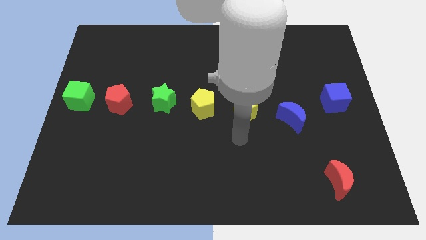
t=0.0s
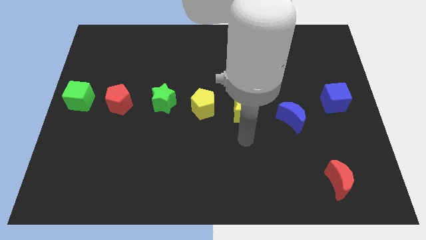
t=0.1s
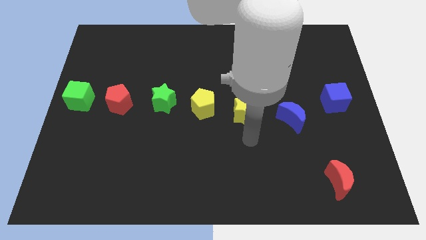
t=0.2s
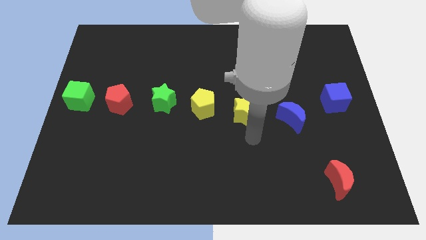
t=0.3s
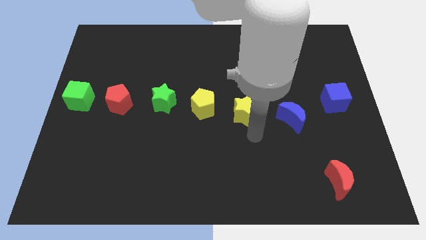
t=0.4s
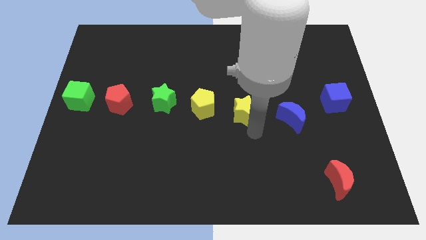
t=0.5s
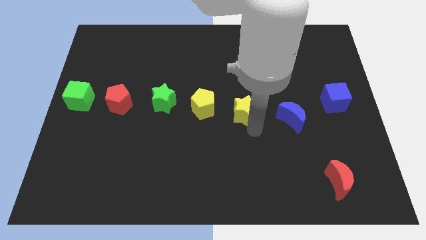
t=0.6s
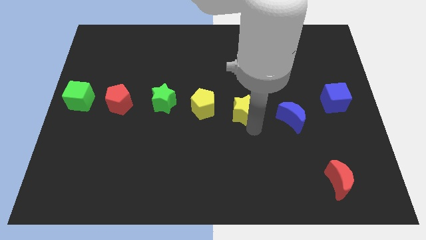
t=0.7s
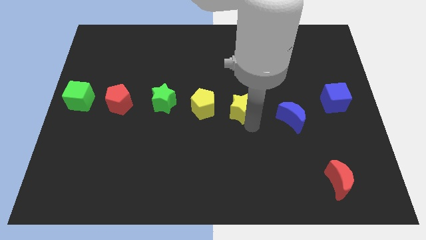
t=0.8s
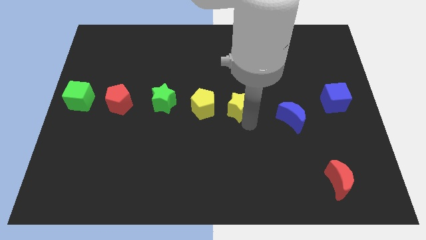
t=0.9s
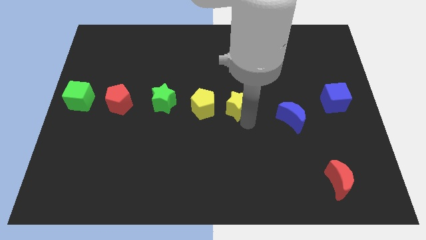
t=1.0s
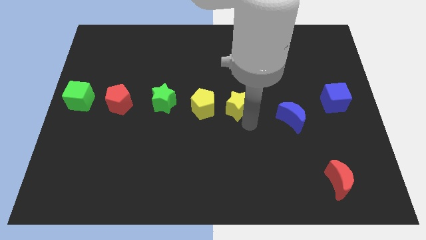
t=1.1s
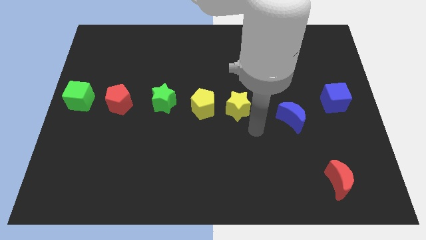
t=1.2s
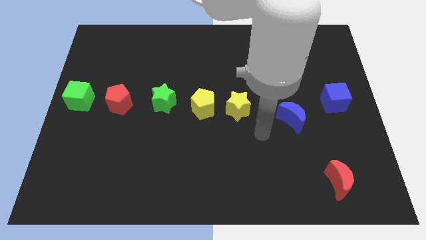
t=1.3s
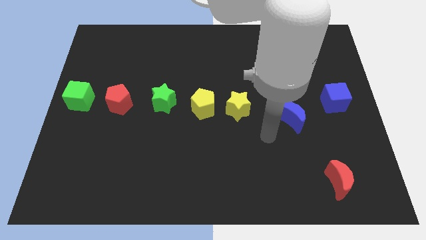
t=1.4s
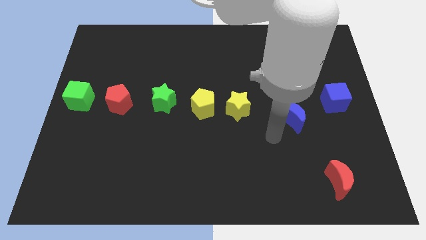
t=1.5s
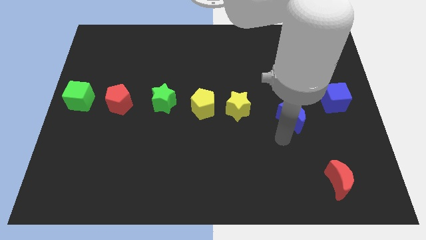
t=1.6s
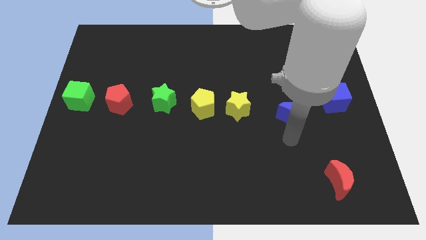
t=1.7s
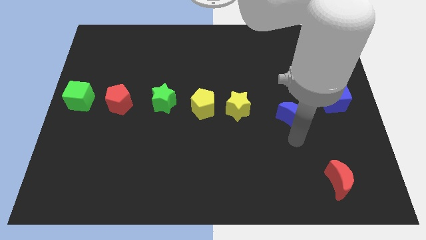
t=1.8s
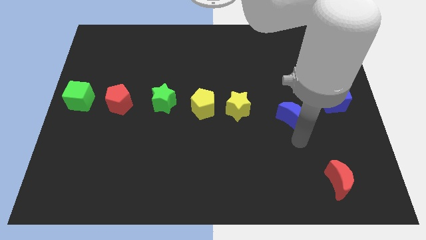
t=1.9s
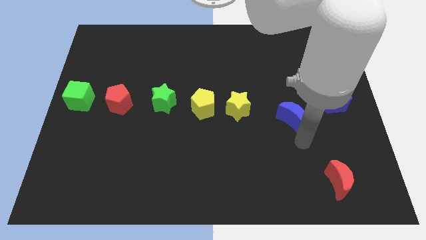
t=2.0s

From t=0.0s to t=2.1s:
move the yellow star right beside the yellow star

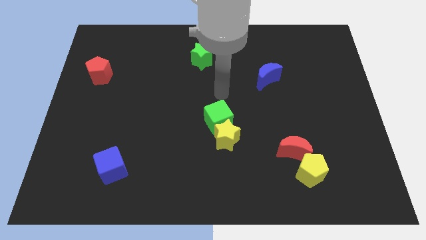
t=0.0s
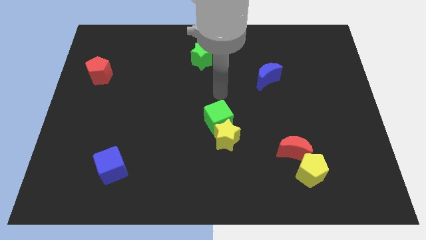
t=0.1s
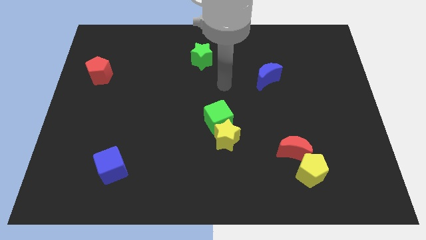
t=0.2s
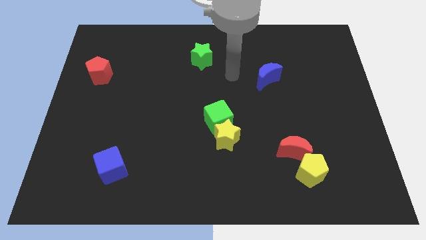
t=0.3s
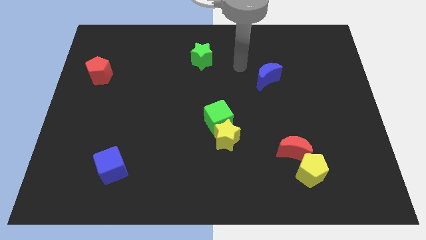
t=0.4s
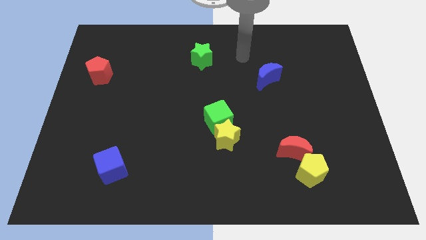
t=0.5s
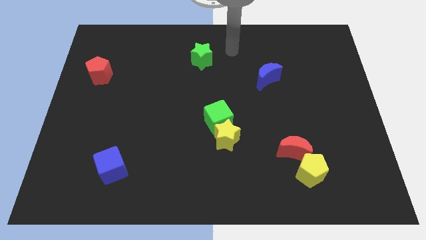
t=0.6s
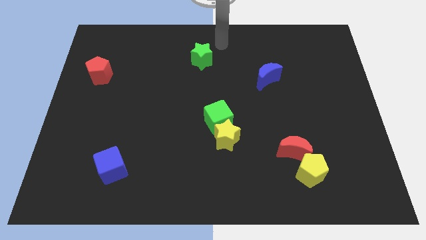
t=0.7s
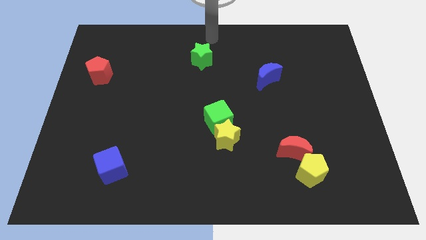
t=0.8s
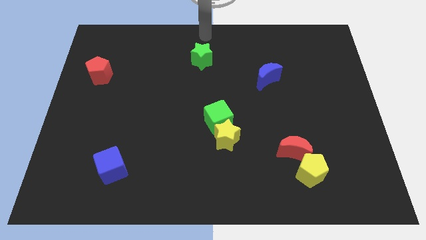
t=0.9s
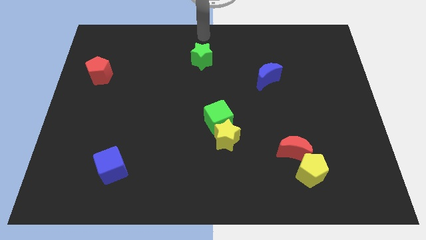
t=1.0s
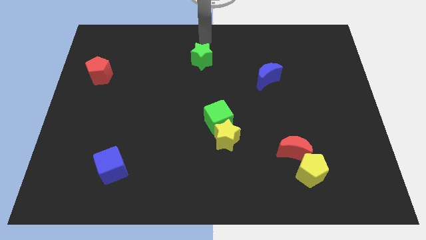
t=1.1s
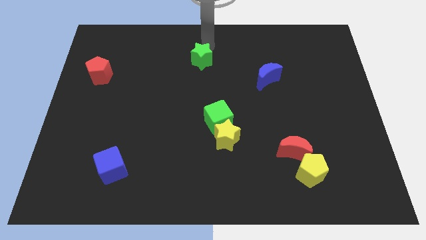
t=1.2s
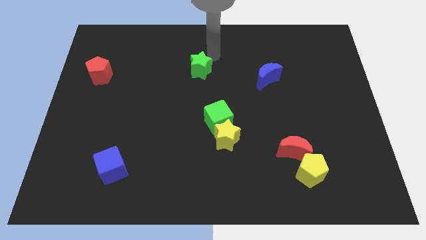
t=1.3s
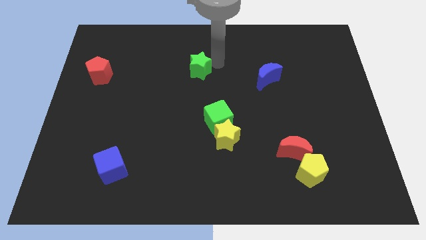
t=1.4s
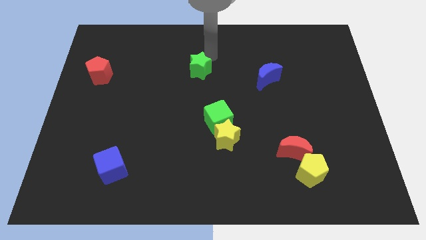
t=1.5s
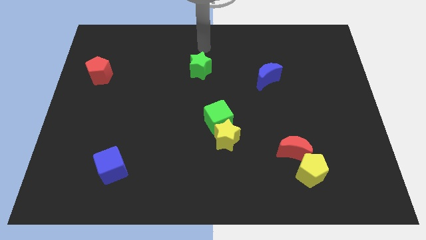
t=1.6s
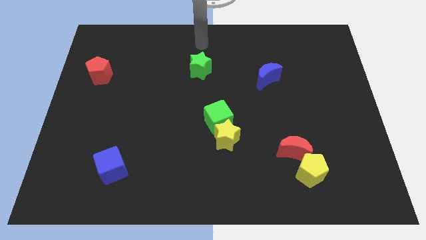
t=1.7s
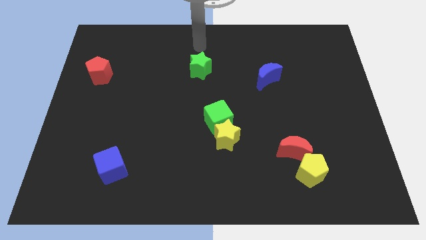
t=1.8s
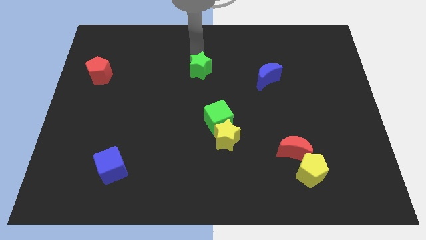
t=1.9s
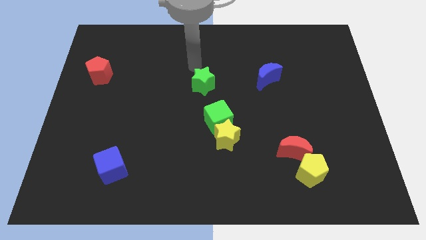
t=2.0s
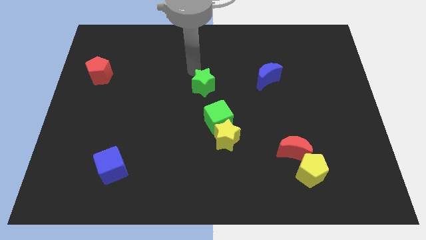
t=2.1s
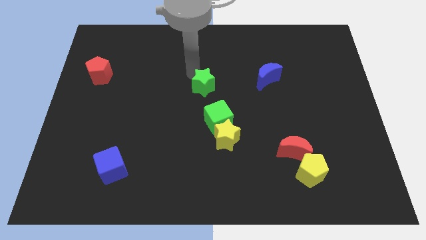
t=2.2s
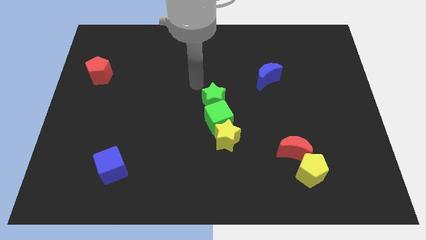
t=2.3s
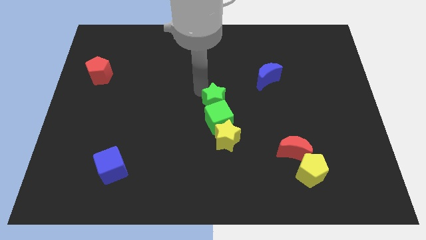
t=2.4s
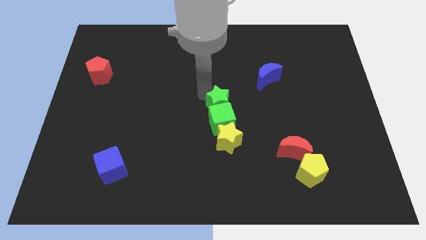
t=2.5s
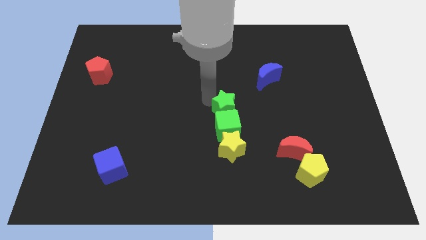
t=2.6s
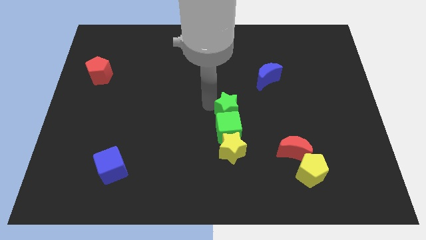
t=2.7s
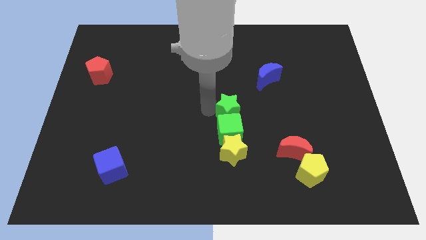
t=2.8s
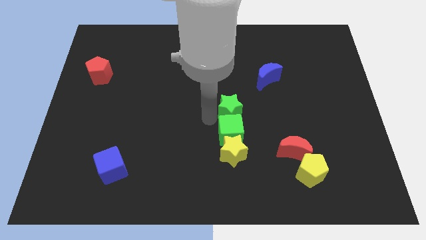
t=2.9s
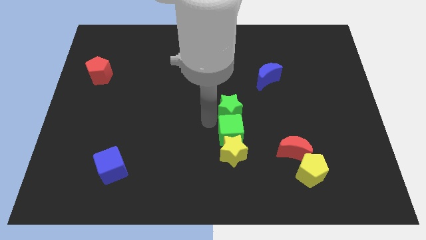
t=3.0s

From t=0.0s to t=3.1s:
push the green star into the green cube

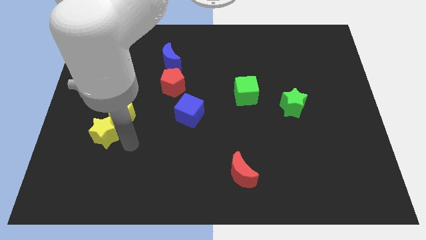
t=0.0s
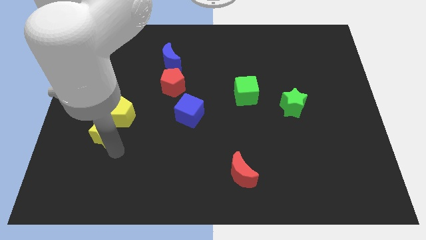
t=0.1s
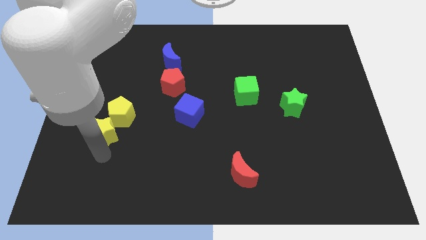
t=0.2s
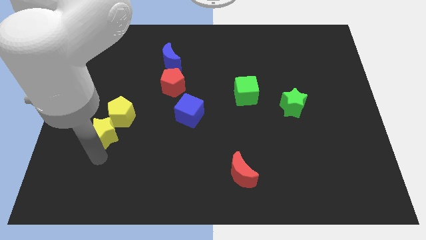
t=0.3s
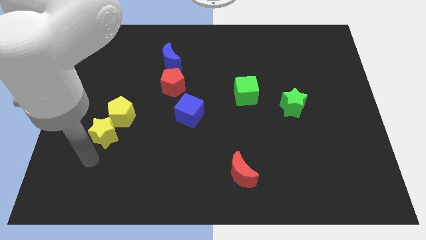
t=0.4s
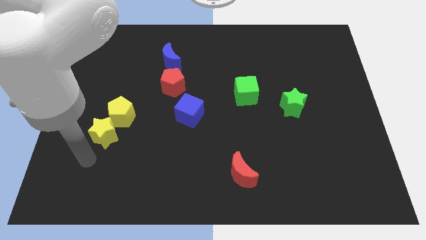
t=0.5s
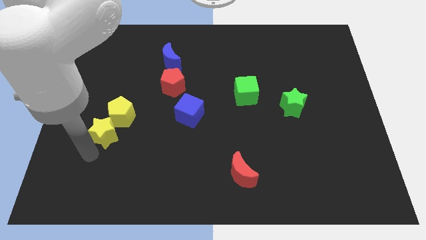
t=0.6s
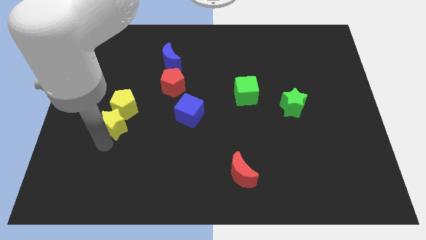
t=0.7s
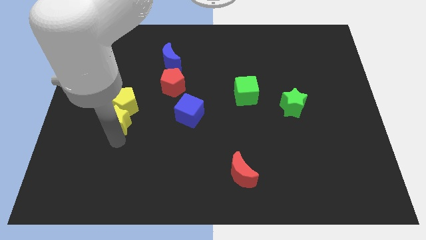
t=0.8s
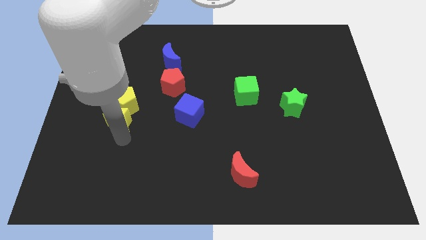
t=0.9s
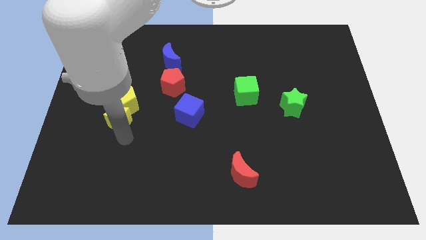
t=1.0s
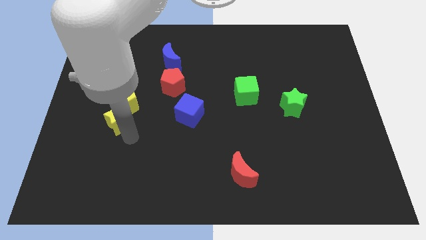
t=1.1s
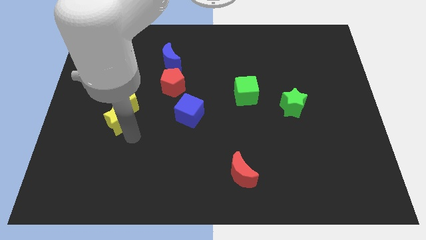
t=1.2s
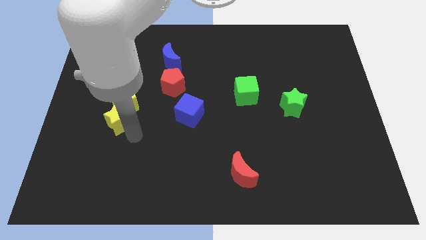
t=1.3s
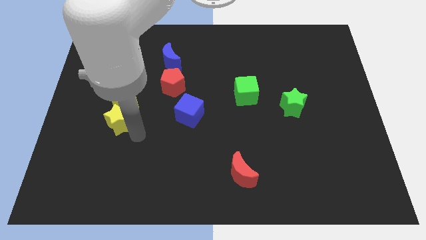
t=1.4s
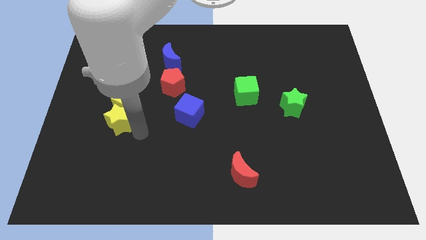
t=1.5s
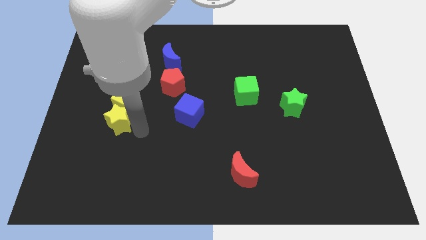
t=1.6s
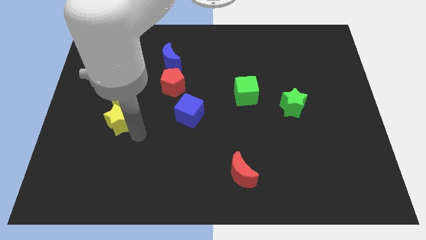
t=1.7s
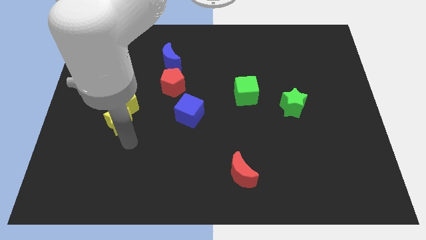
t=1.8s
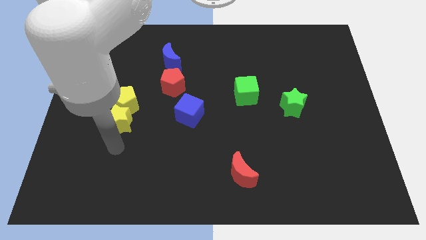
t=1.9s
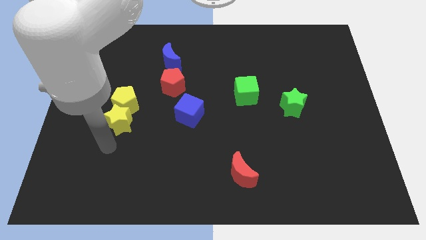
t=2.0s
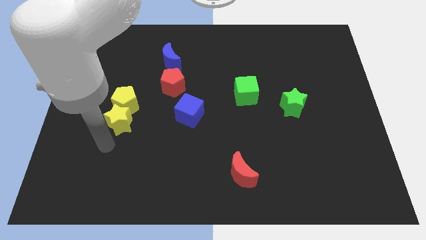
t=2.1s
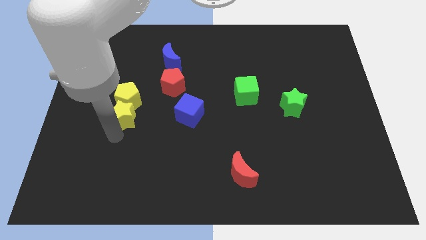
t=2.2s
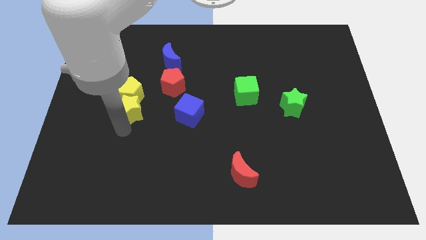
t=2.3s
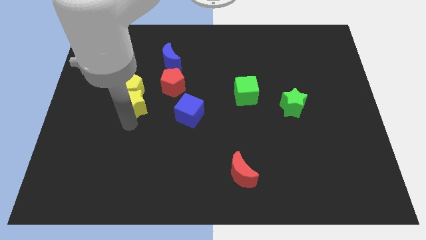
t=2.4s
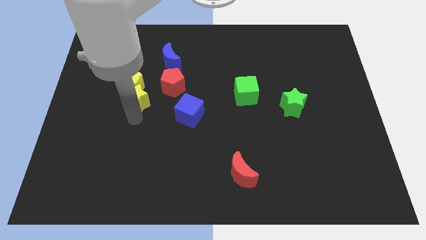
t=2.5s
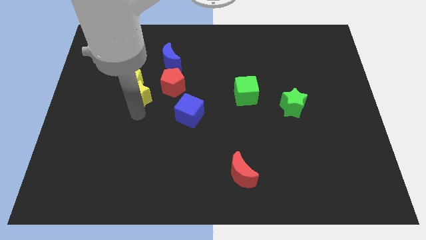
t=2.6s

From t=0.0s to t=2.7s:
push the yellow blocks towards top

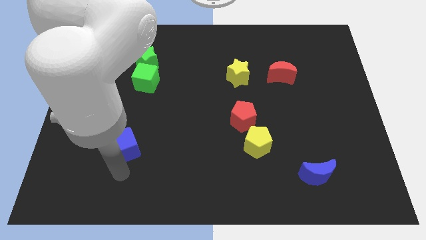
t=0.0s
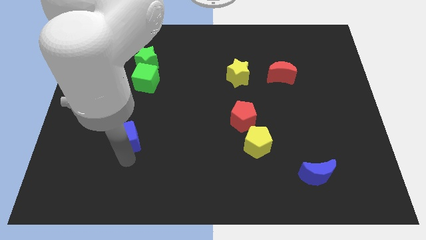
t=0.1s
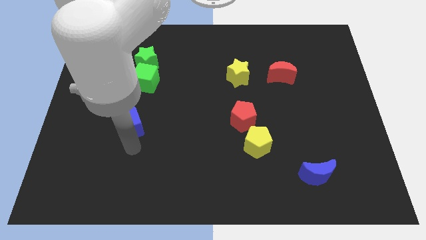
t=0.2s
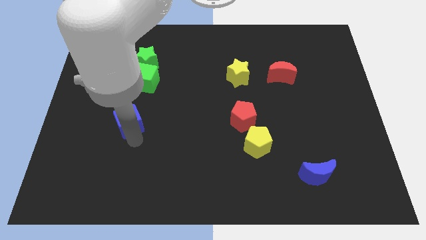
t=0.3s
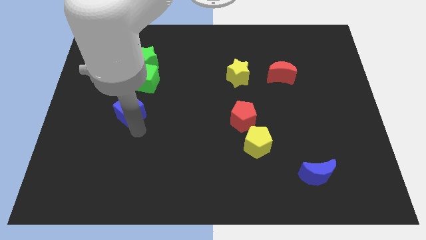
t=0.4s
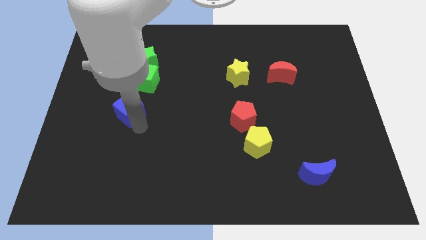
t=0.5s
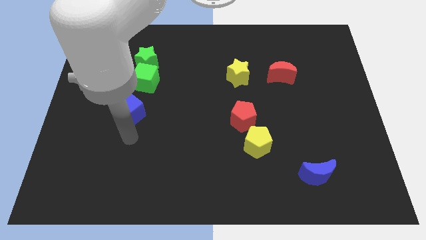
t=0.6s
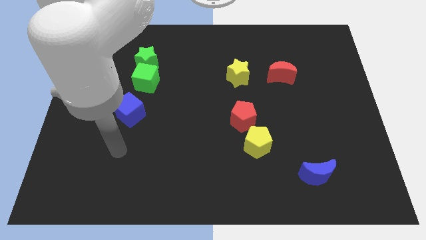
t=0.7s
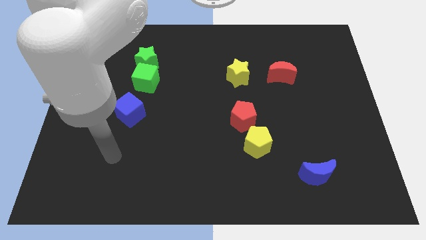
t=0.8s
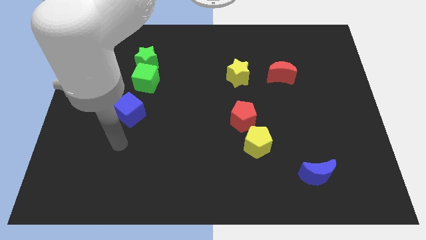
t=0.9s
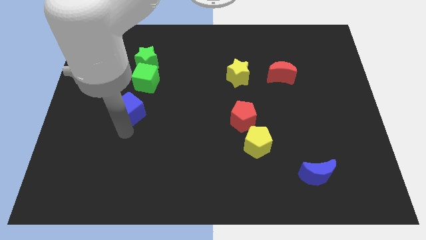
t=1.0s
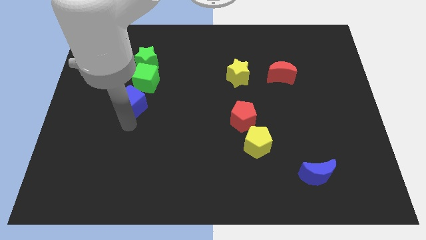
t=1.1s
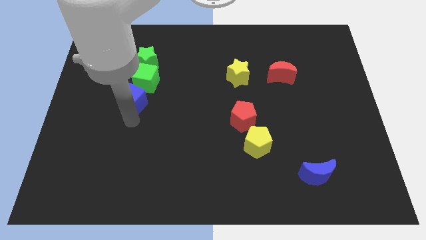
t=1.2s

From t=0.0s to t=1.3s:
place blue cube to the bottom of green cube
